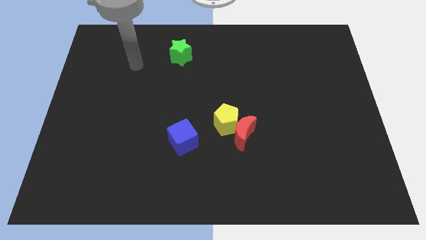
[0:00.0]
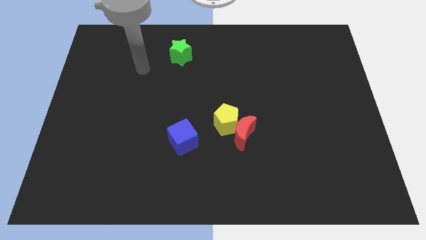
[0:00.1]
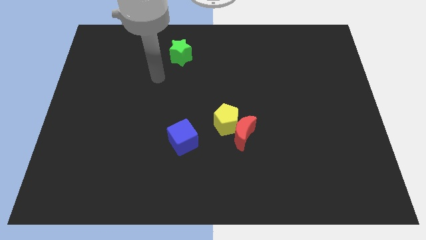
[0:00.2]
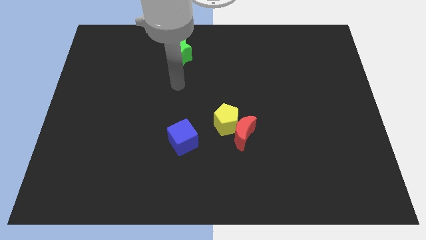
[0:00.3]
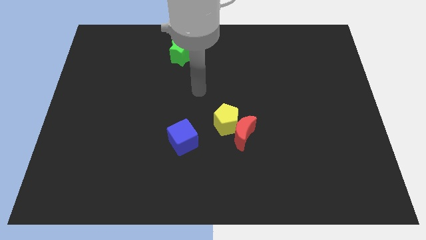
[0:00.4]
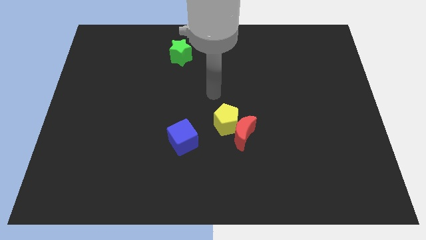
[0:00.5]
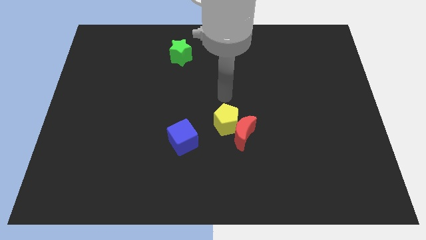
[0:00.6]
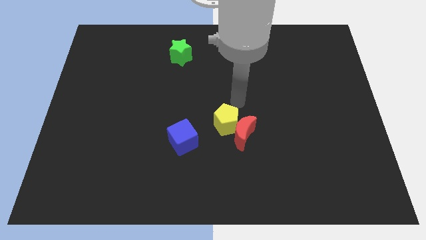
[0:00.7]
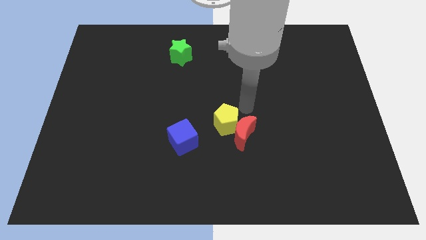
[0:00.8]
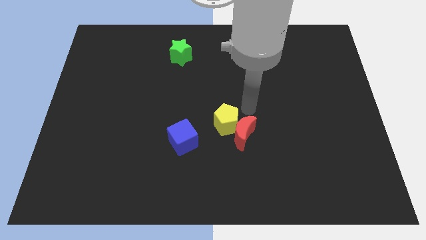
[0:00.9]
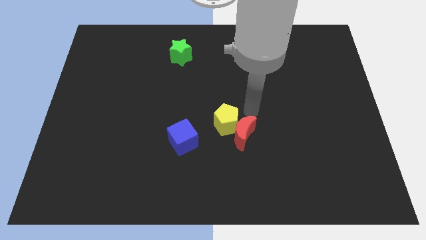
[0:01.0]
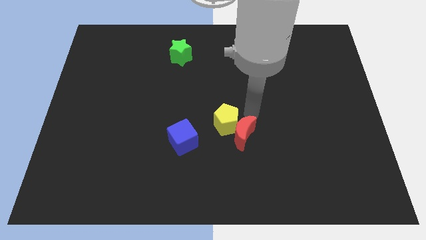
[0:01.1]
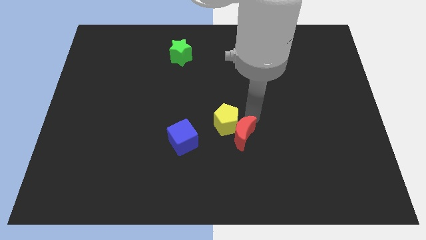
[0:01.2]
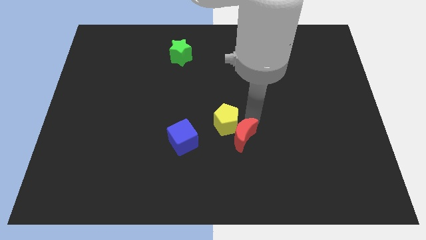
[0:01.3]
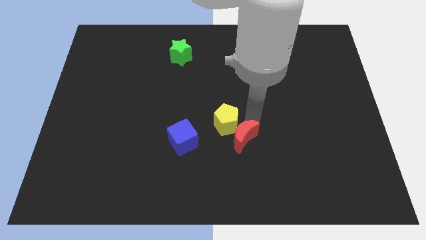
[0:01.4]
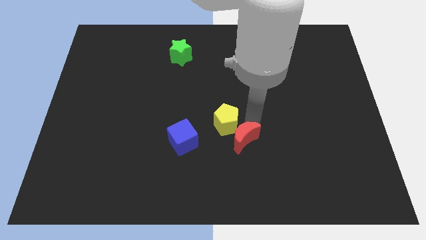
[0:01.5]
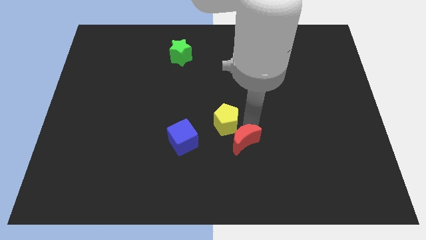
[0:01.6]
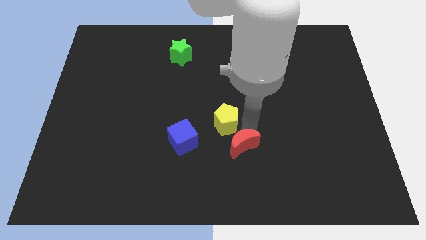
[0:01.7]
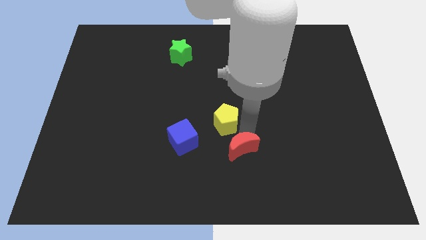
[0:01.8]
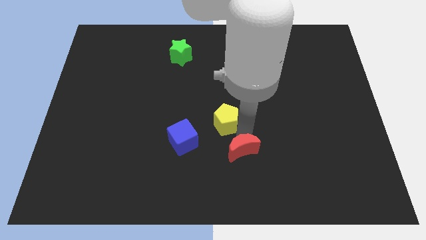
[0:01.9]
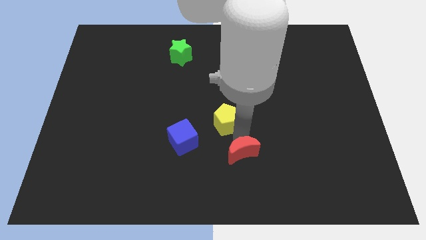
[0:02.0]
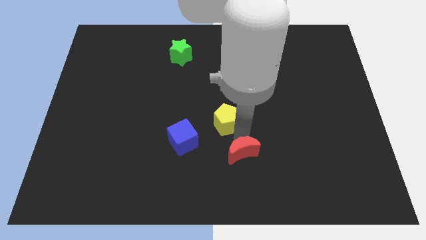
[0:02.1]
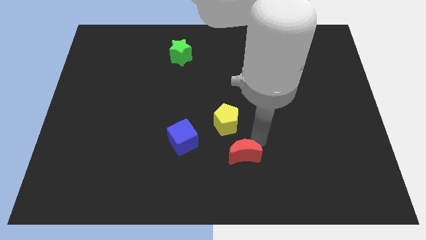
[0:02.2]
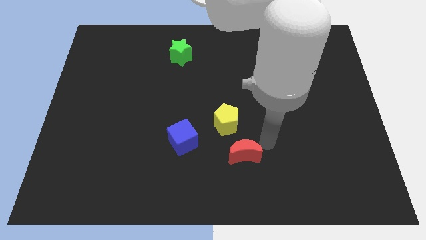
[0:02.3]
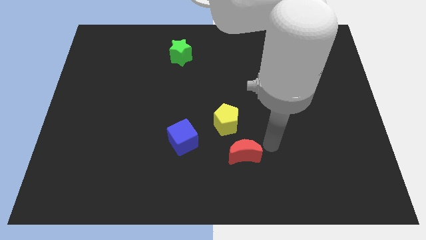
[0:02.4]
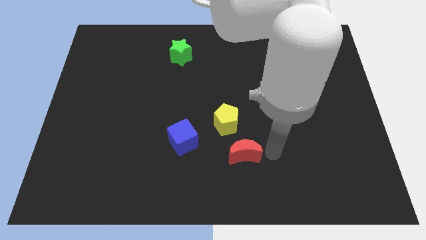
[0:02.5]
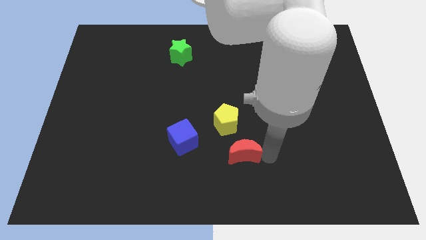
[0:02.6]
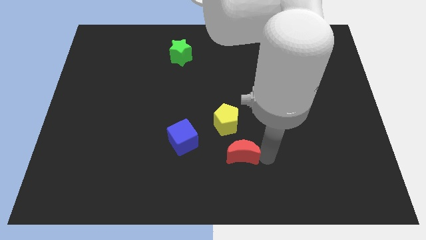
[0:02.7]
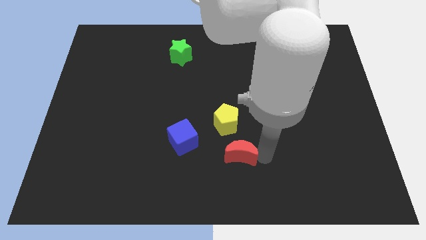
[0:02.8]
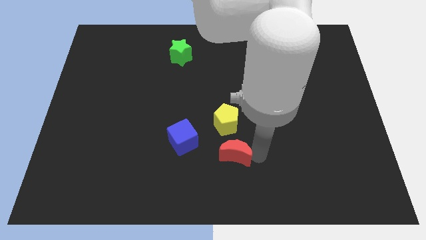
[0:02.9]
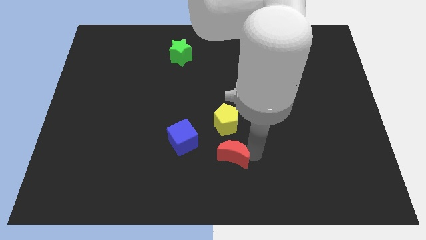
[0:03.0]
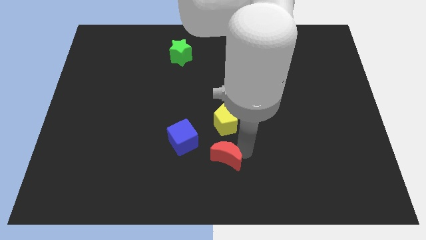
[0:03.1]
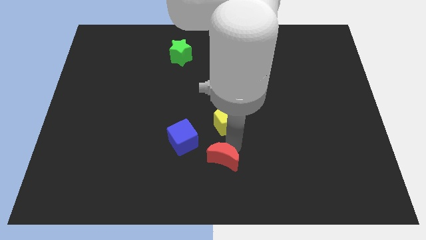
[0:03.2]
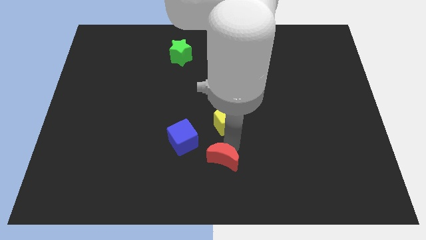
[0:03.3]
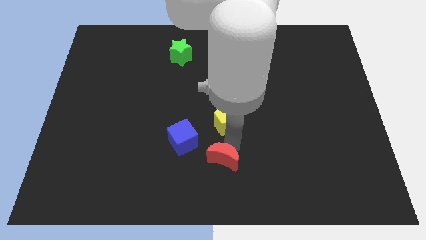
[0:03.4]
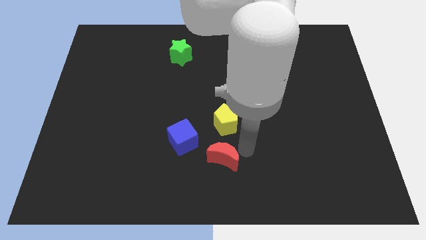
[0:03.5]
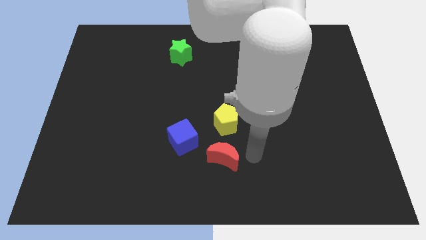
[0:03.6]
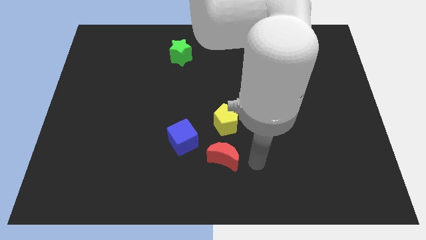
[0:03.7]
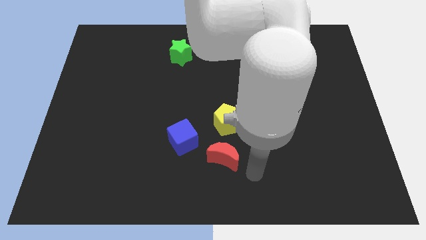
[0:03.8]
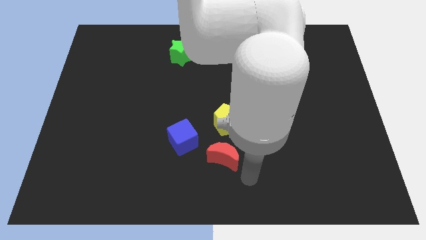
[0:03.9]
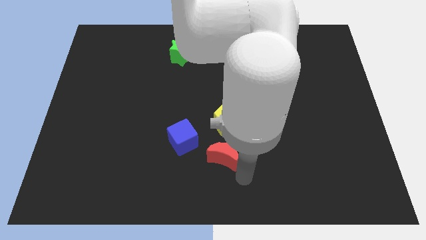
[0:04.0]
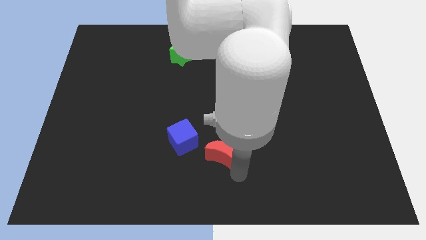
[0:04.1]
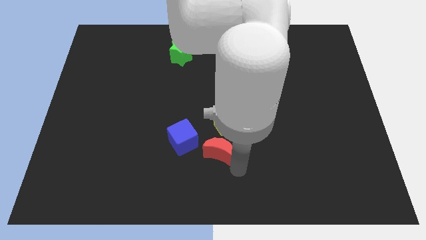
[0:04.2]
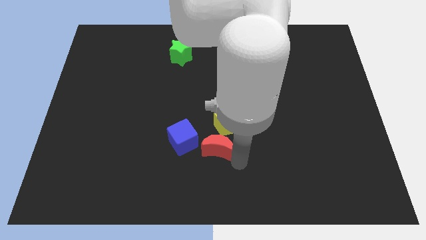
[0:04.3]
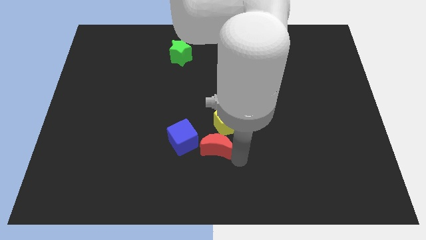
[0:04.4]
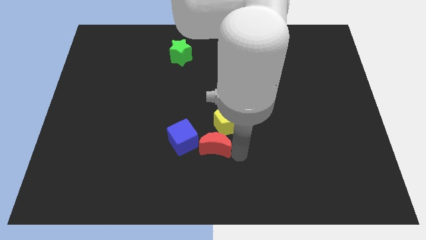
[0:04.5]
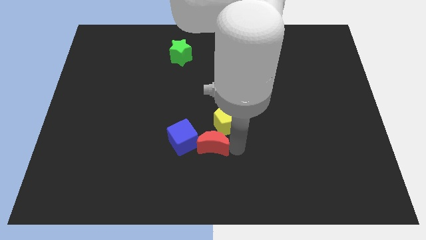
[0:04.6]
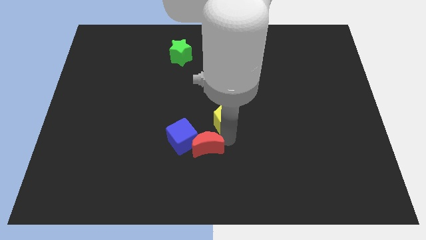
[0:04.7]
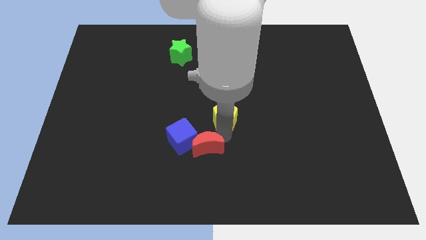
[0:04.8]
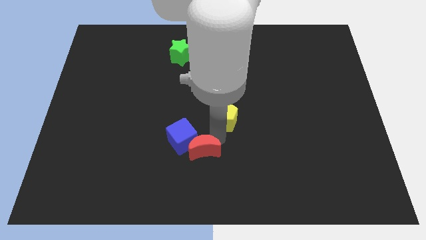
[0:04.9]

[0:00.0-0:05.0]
slide the red block to the cube

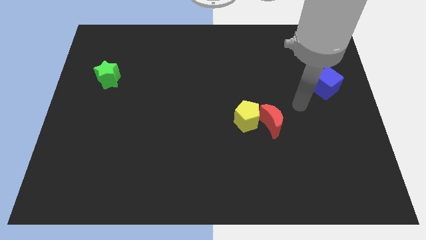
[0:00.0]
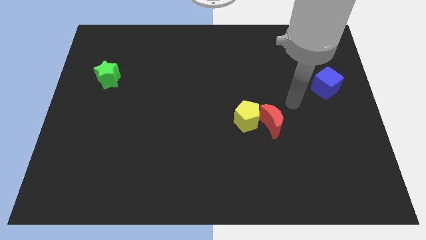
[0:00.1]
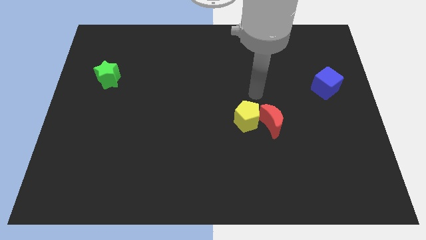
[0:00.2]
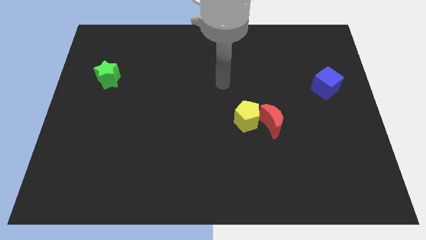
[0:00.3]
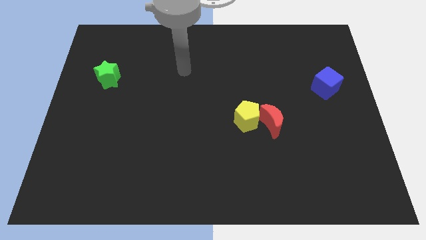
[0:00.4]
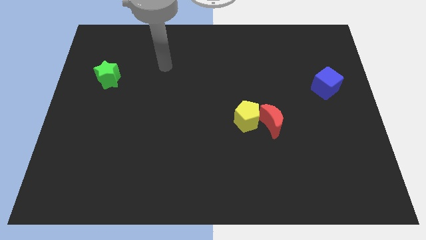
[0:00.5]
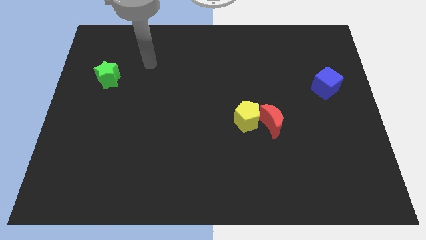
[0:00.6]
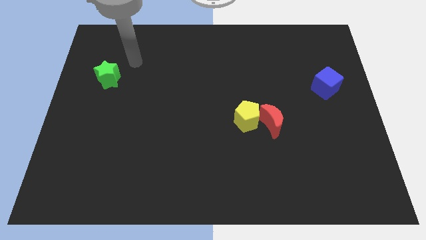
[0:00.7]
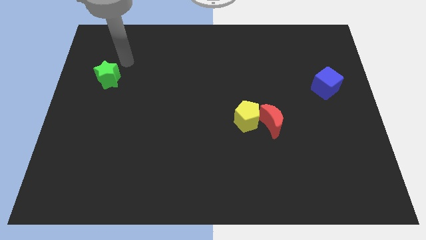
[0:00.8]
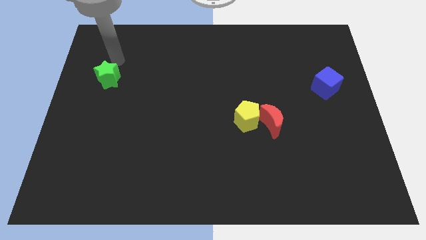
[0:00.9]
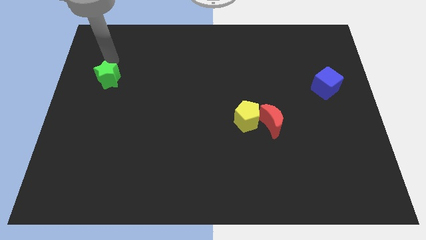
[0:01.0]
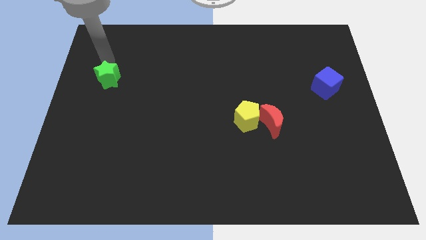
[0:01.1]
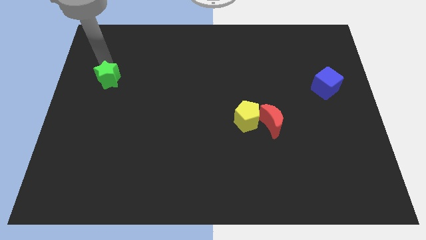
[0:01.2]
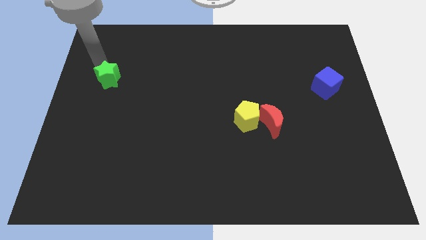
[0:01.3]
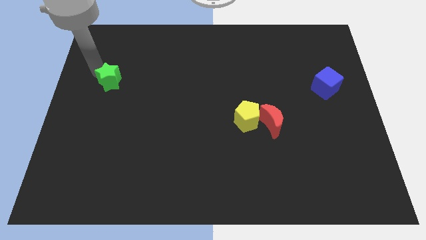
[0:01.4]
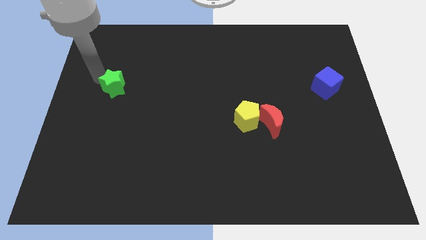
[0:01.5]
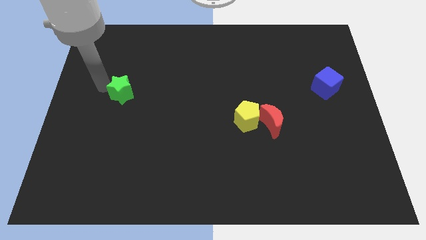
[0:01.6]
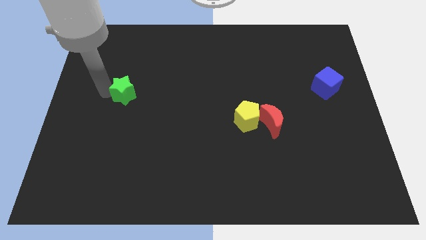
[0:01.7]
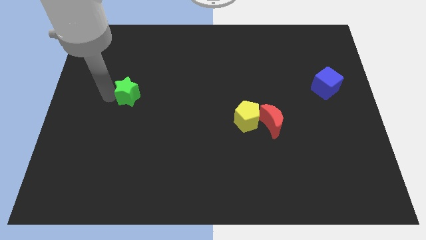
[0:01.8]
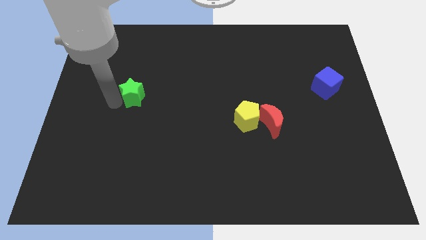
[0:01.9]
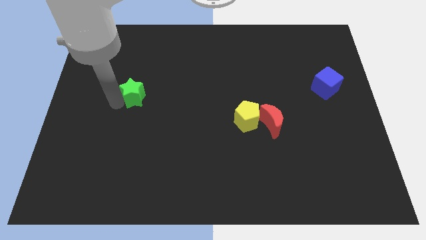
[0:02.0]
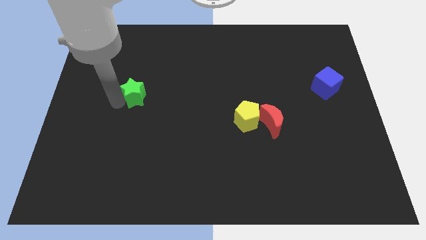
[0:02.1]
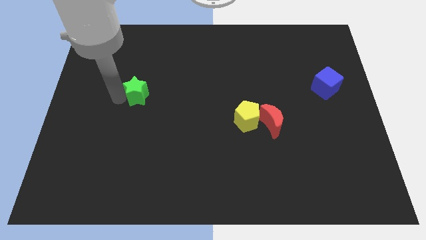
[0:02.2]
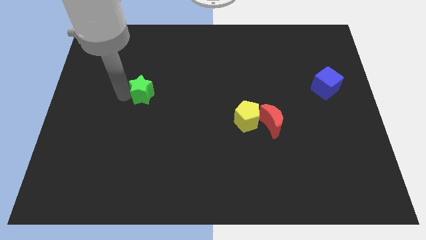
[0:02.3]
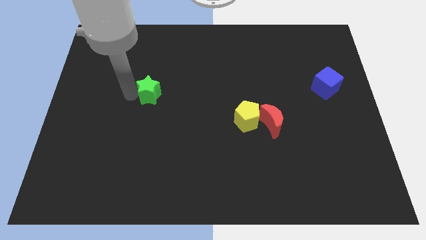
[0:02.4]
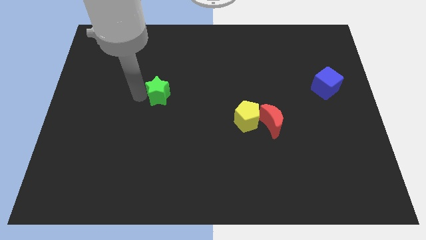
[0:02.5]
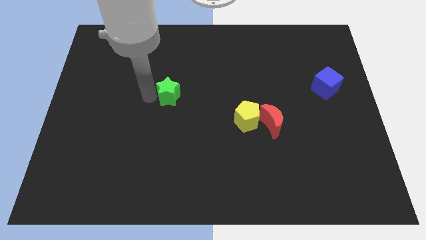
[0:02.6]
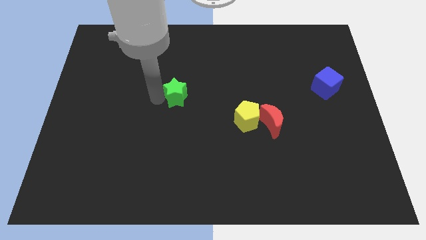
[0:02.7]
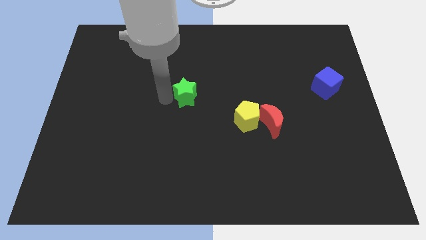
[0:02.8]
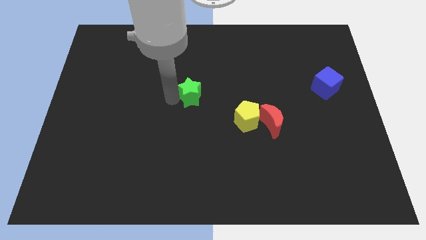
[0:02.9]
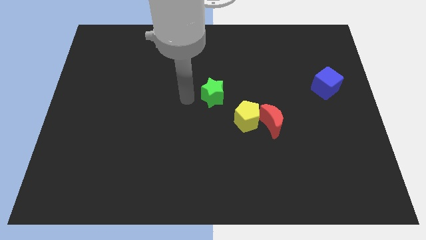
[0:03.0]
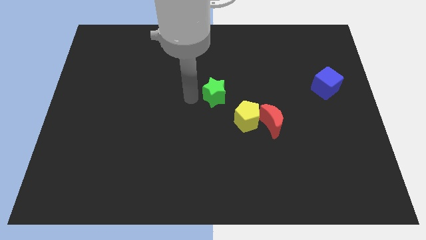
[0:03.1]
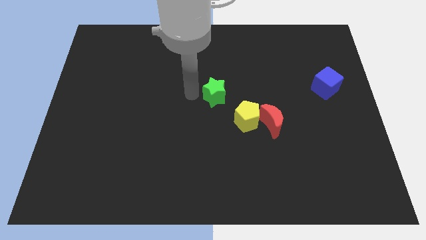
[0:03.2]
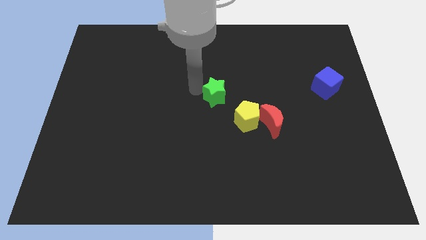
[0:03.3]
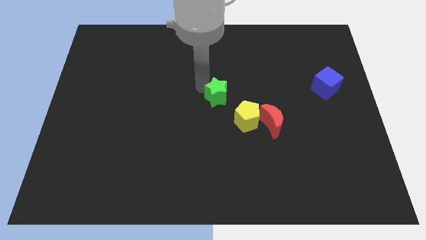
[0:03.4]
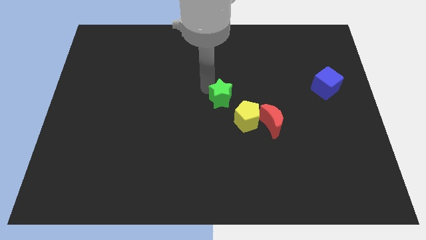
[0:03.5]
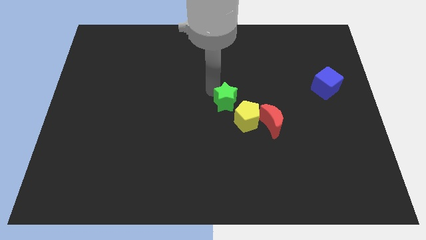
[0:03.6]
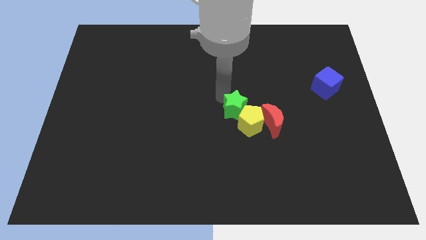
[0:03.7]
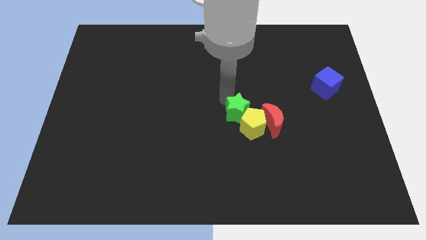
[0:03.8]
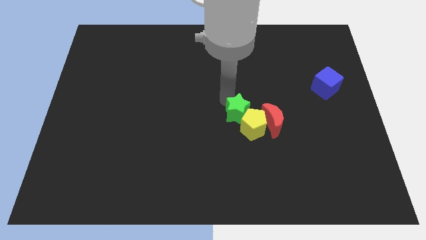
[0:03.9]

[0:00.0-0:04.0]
move the green star towards the yellow block
